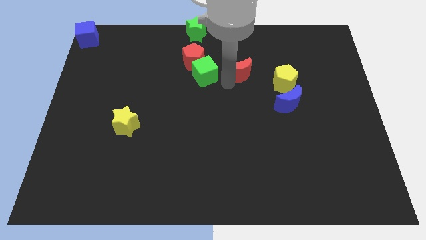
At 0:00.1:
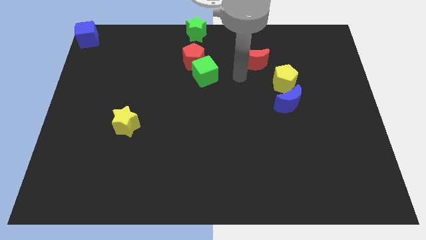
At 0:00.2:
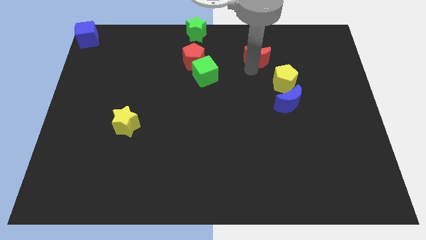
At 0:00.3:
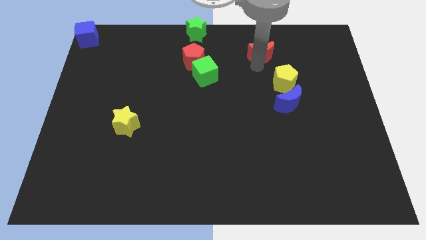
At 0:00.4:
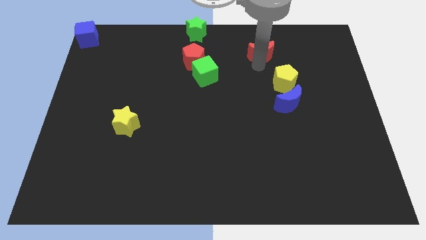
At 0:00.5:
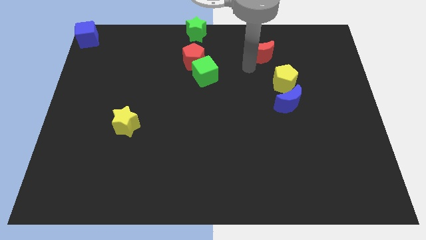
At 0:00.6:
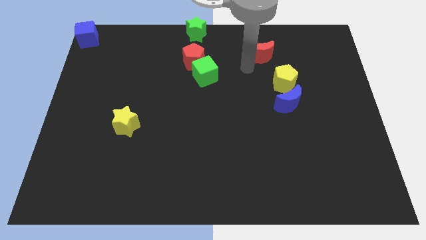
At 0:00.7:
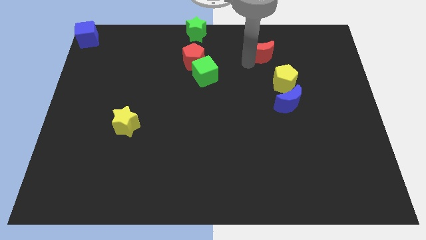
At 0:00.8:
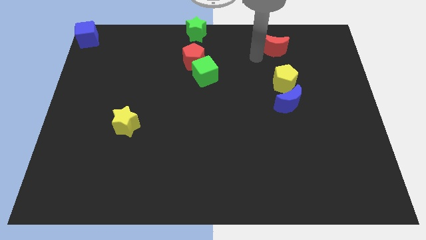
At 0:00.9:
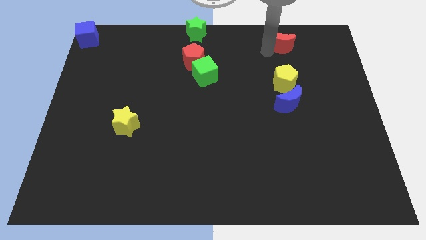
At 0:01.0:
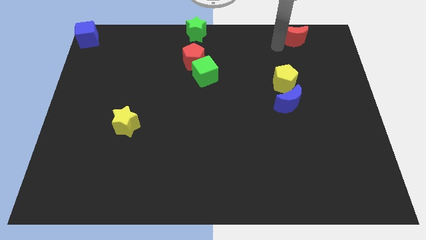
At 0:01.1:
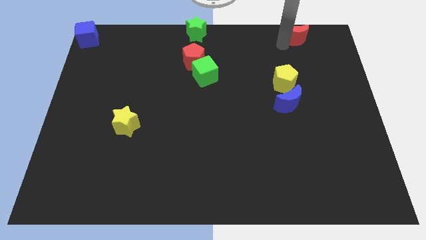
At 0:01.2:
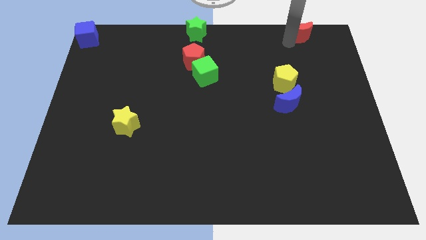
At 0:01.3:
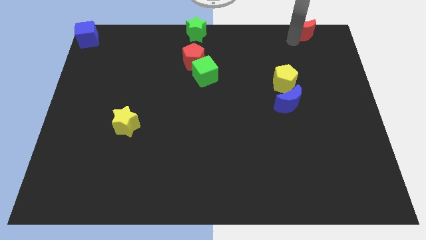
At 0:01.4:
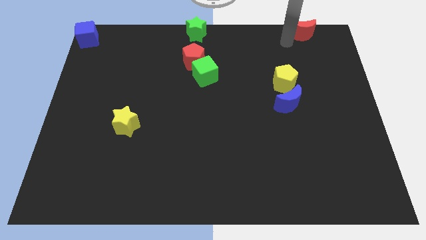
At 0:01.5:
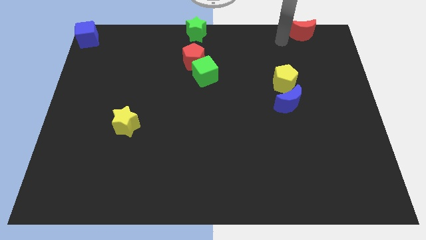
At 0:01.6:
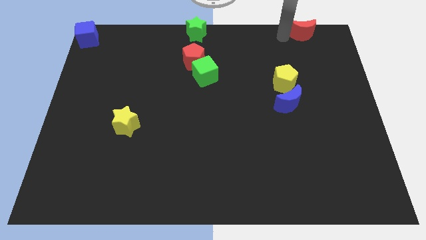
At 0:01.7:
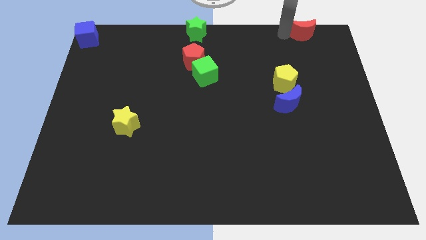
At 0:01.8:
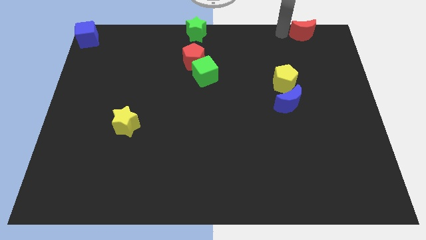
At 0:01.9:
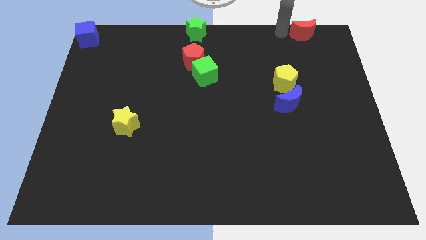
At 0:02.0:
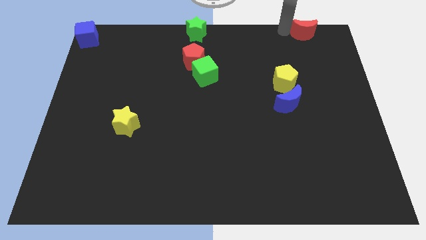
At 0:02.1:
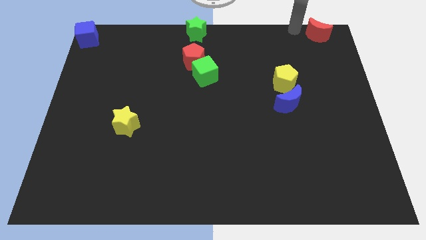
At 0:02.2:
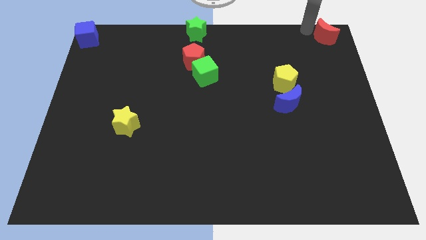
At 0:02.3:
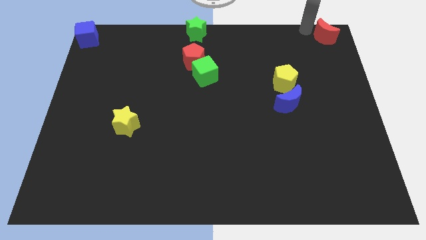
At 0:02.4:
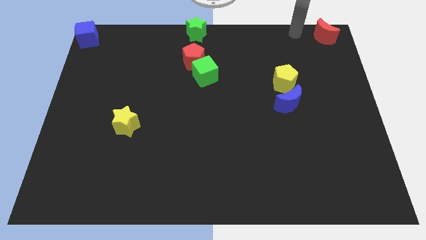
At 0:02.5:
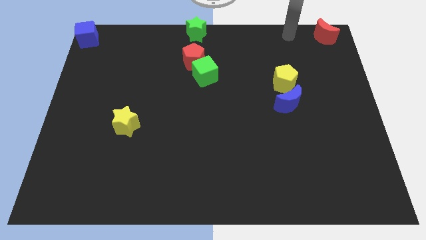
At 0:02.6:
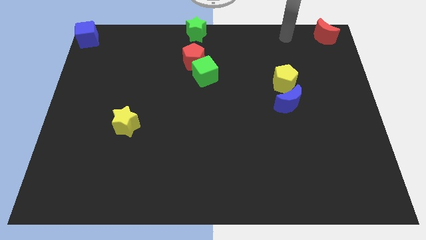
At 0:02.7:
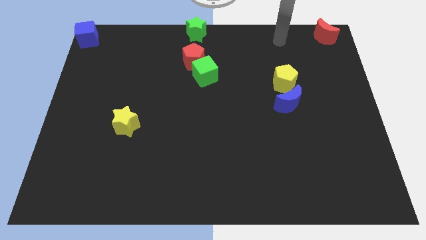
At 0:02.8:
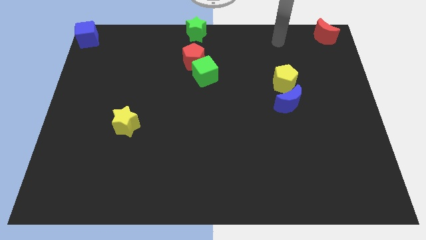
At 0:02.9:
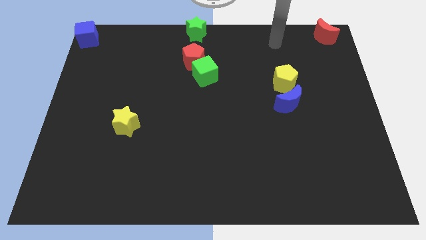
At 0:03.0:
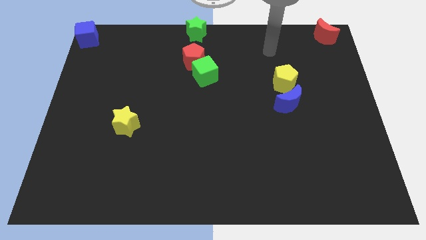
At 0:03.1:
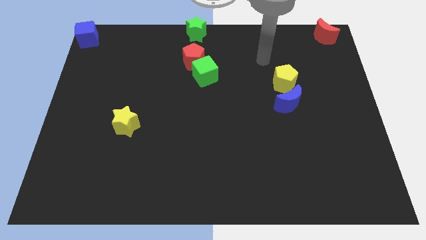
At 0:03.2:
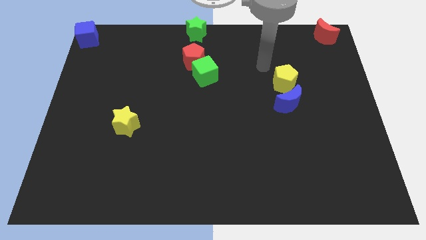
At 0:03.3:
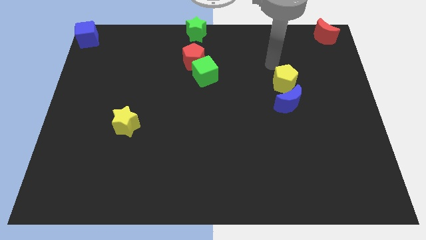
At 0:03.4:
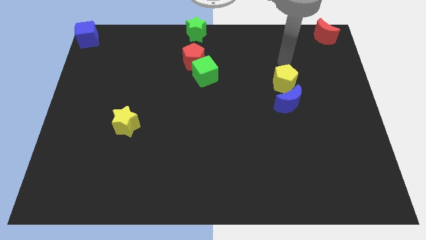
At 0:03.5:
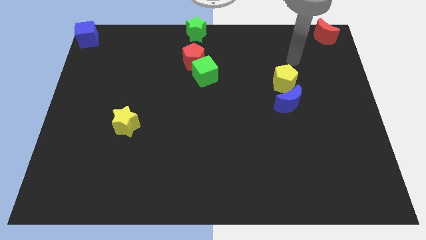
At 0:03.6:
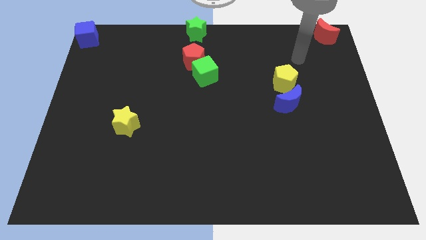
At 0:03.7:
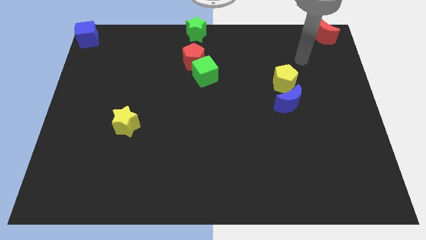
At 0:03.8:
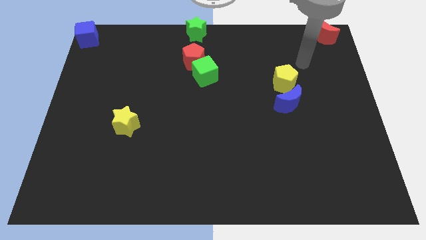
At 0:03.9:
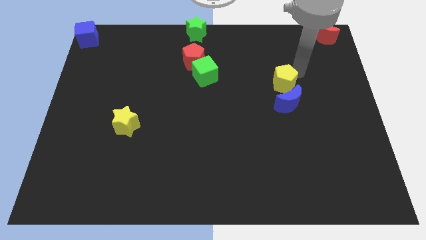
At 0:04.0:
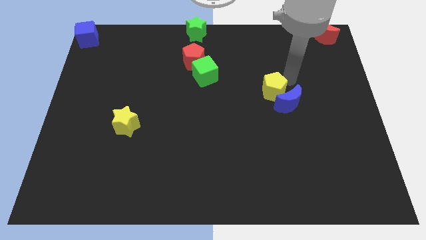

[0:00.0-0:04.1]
push the red moon to the top right of the board

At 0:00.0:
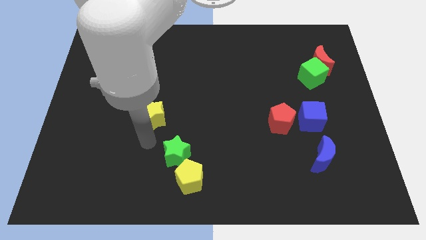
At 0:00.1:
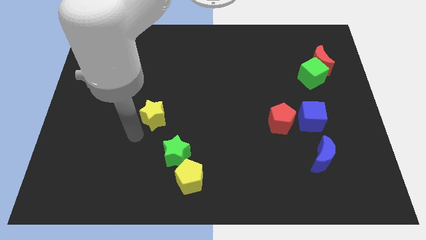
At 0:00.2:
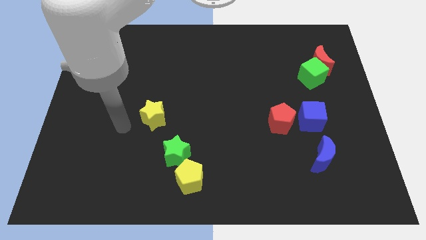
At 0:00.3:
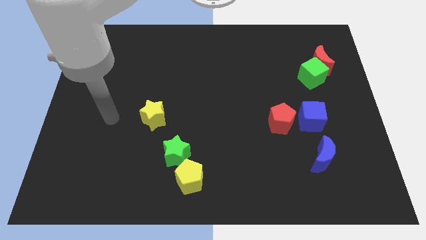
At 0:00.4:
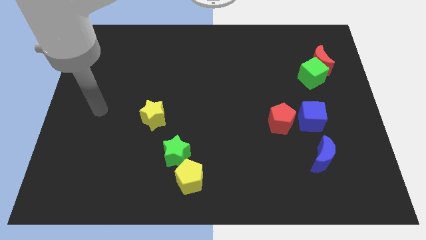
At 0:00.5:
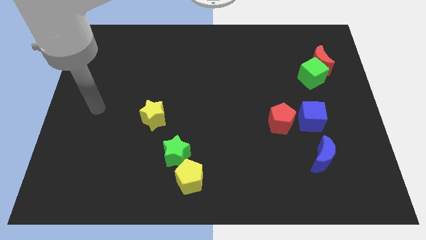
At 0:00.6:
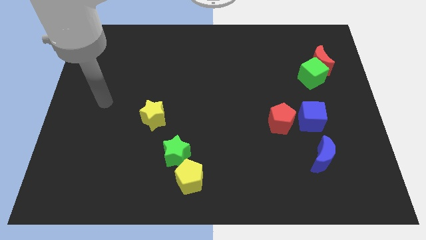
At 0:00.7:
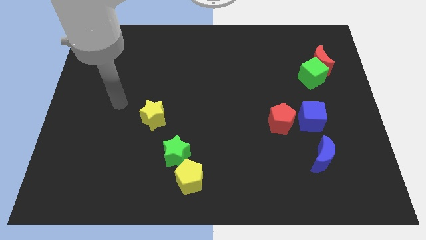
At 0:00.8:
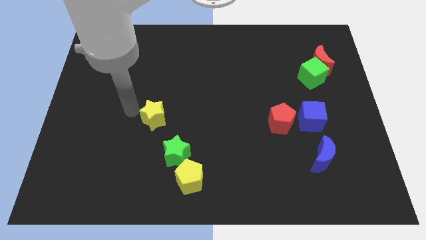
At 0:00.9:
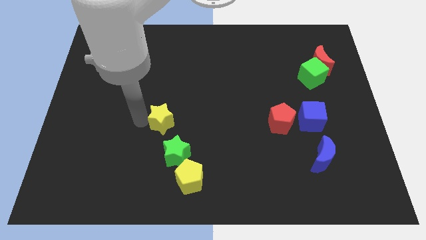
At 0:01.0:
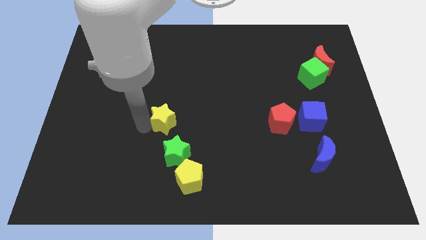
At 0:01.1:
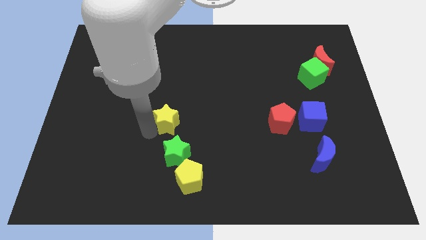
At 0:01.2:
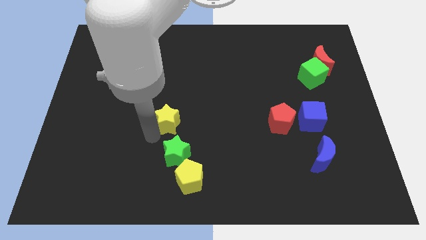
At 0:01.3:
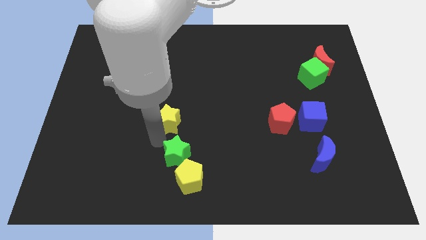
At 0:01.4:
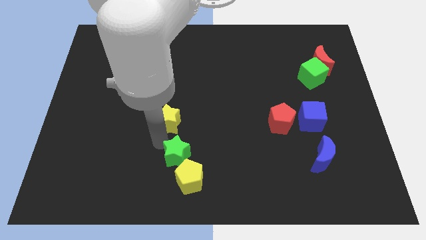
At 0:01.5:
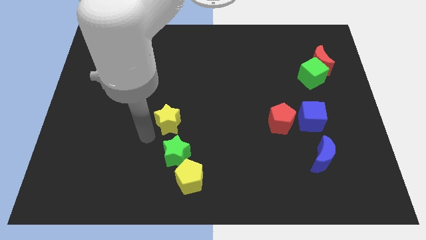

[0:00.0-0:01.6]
move the yellow star towards right side

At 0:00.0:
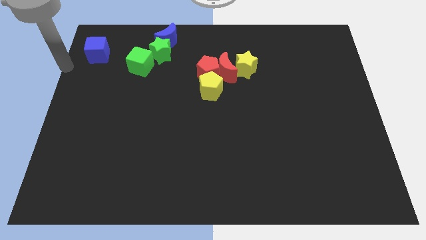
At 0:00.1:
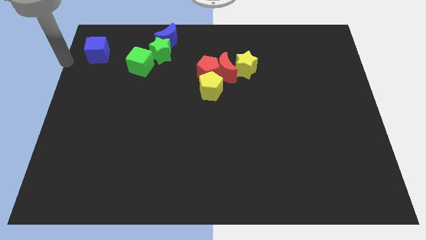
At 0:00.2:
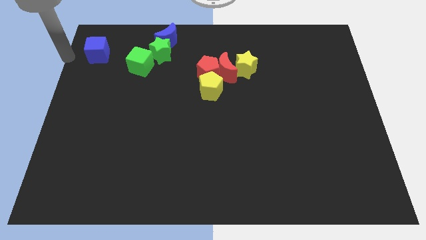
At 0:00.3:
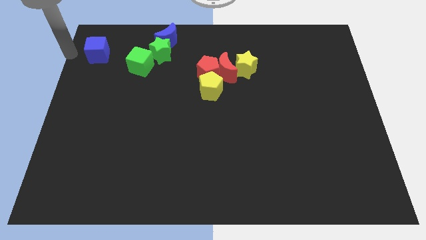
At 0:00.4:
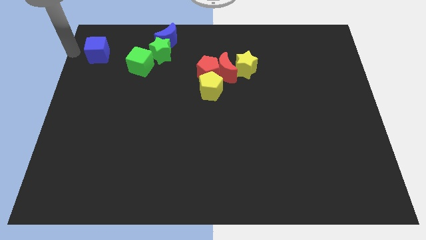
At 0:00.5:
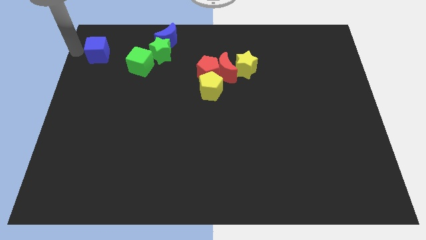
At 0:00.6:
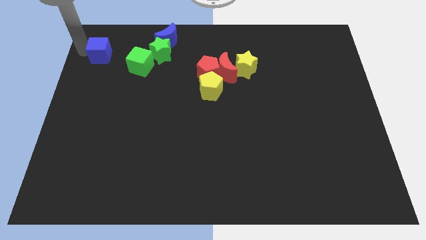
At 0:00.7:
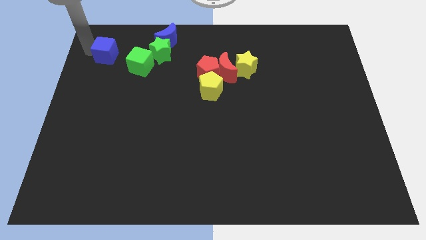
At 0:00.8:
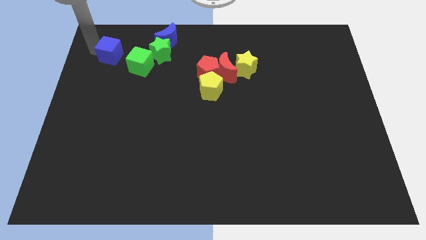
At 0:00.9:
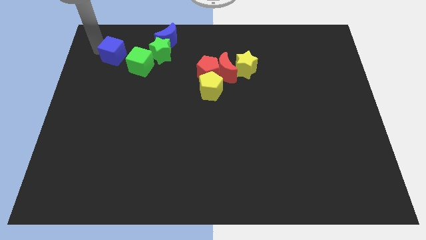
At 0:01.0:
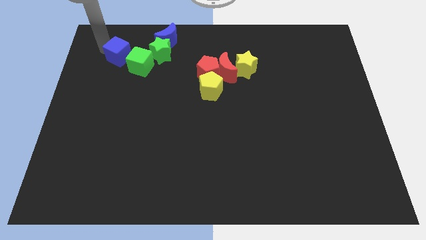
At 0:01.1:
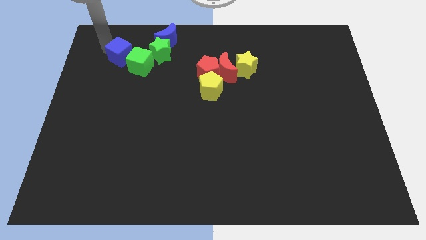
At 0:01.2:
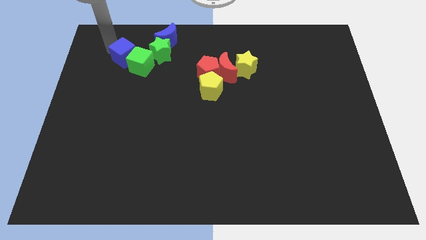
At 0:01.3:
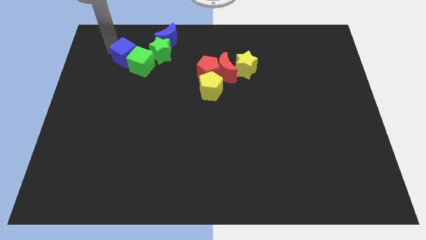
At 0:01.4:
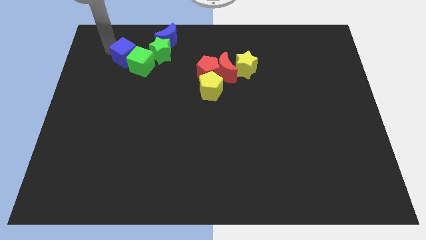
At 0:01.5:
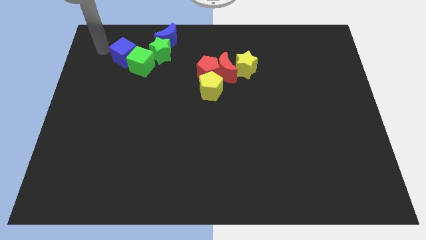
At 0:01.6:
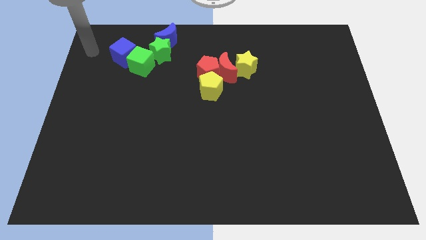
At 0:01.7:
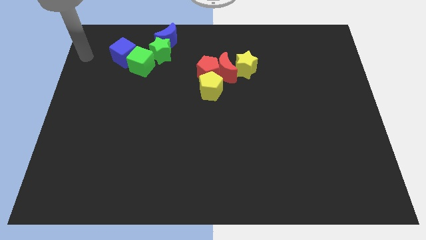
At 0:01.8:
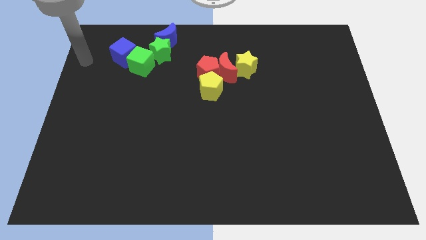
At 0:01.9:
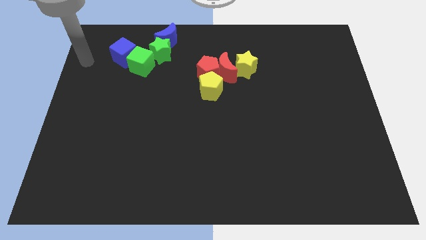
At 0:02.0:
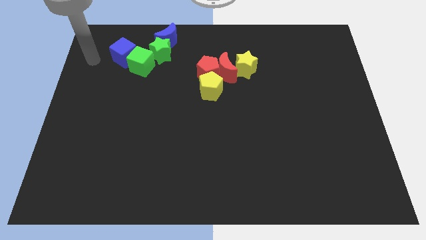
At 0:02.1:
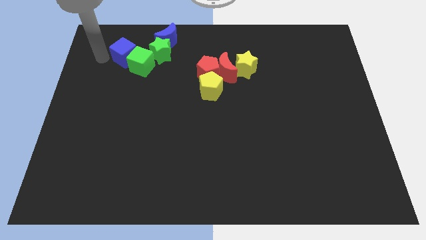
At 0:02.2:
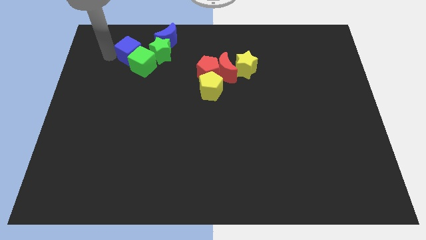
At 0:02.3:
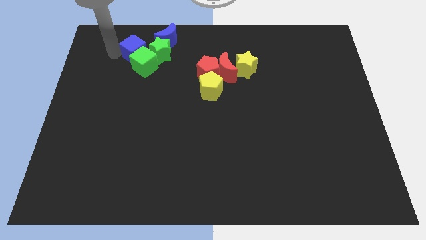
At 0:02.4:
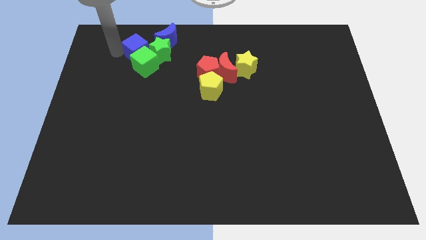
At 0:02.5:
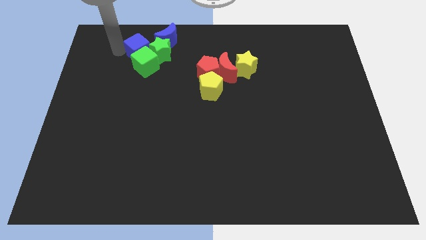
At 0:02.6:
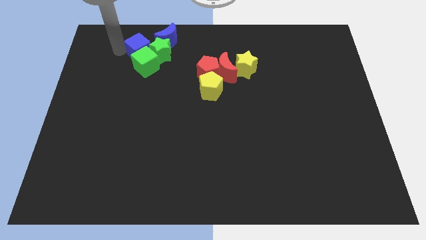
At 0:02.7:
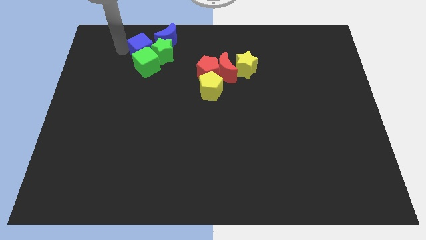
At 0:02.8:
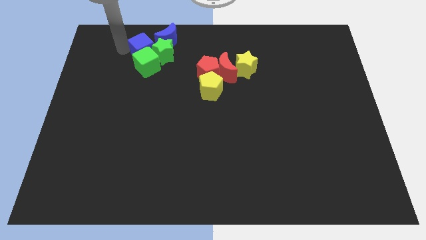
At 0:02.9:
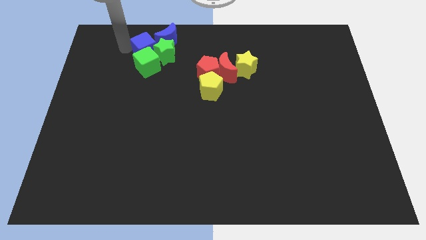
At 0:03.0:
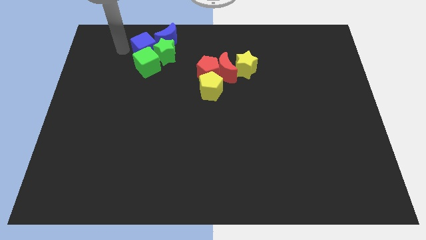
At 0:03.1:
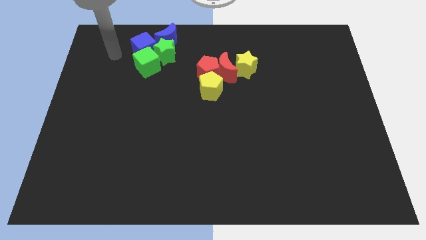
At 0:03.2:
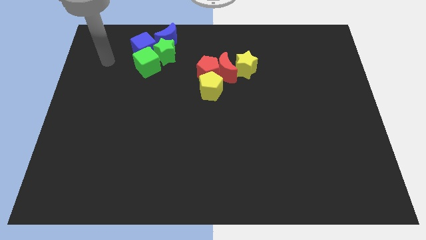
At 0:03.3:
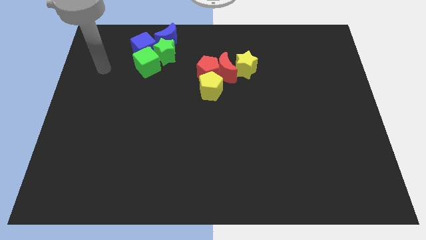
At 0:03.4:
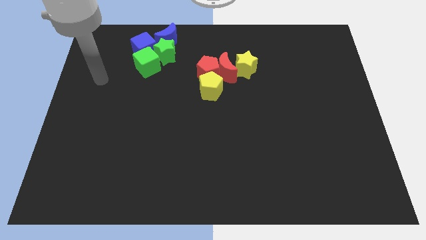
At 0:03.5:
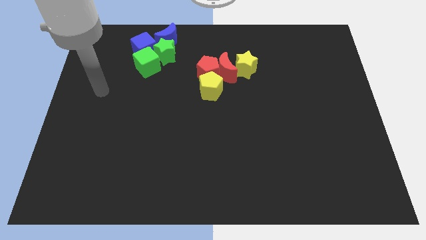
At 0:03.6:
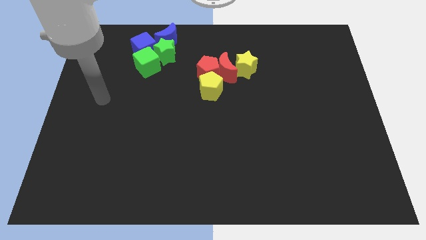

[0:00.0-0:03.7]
push the blue cube above the green cube
